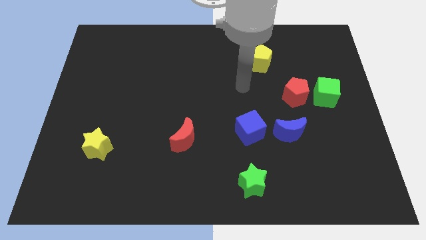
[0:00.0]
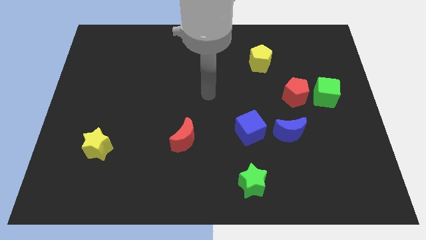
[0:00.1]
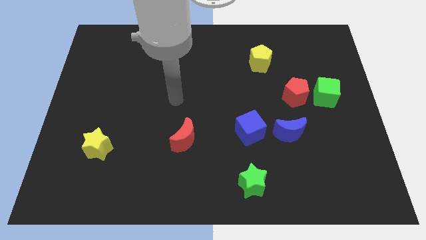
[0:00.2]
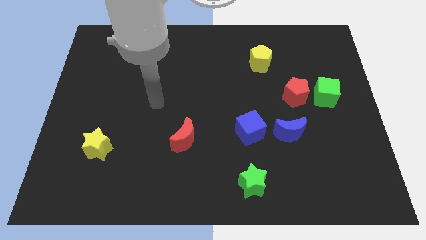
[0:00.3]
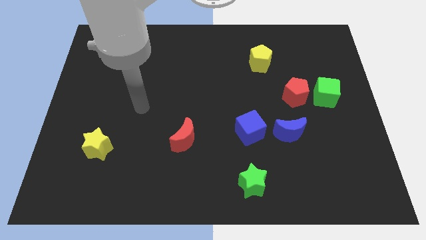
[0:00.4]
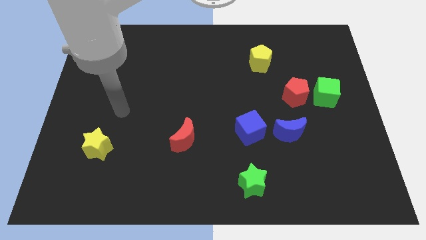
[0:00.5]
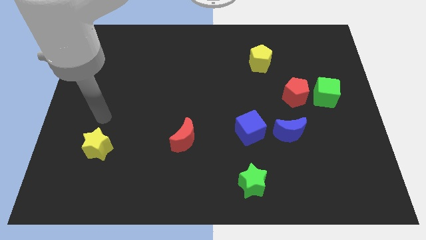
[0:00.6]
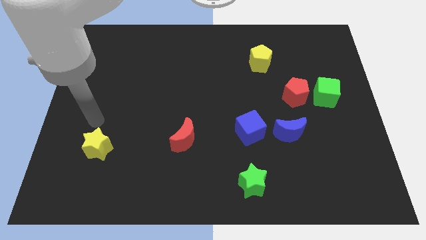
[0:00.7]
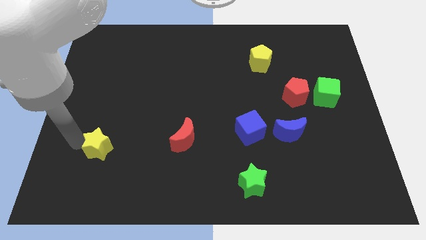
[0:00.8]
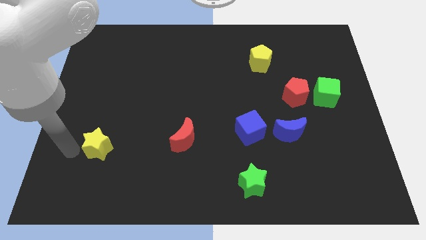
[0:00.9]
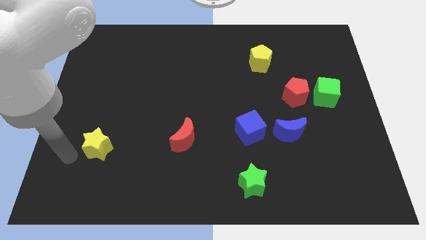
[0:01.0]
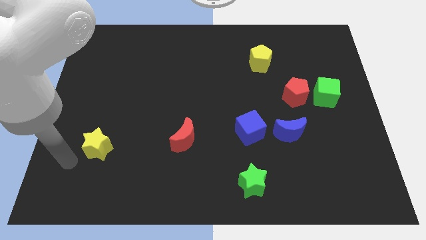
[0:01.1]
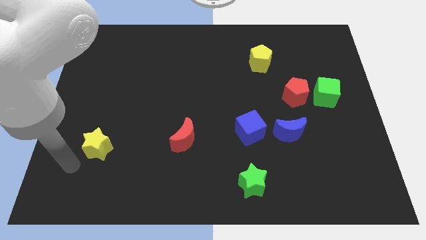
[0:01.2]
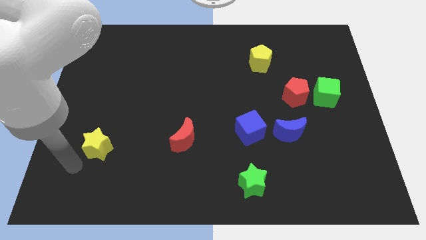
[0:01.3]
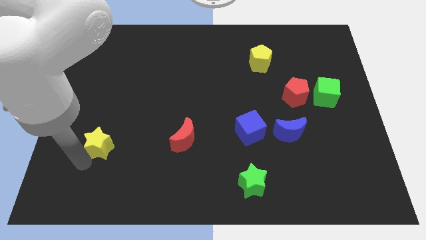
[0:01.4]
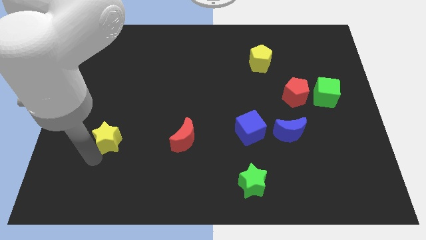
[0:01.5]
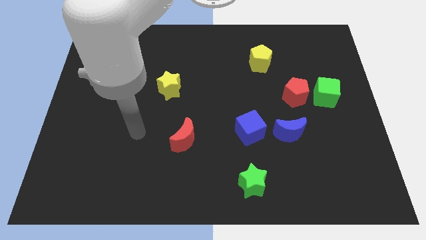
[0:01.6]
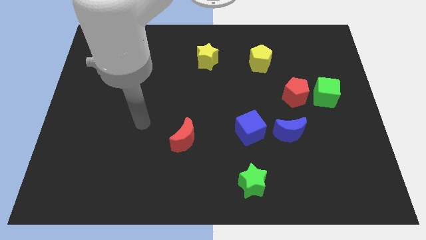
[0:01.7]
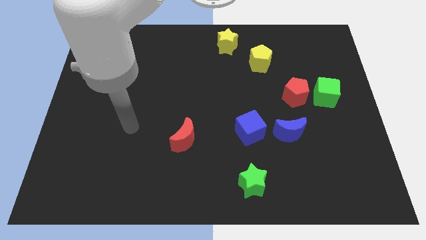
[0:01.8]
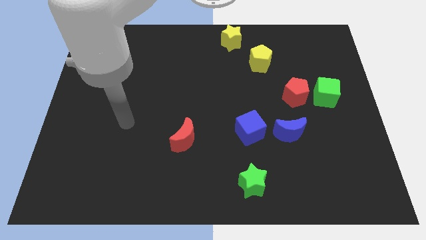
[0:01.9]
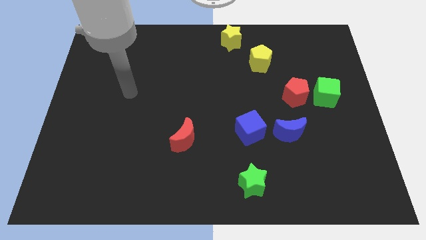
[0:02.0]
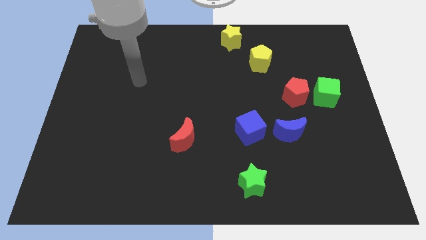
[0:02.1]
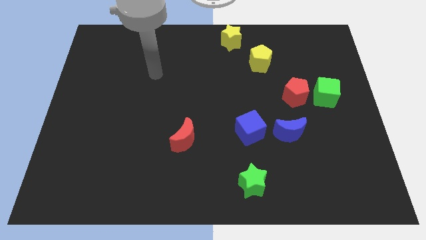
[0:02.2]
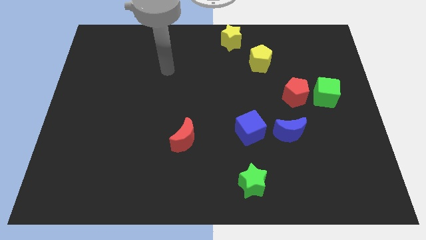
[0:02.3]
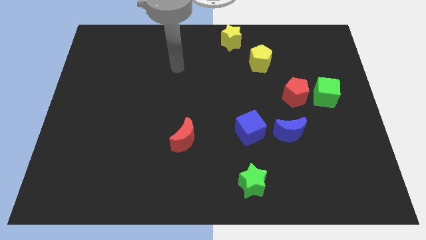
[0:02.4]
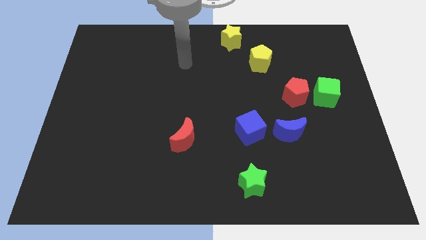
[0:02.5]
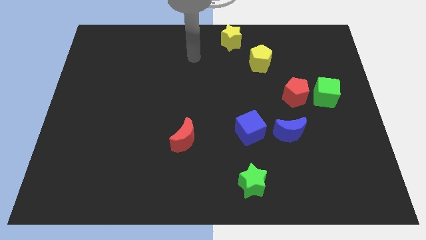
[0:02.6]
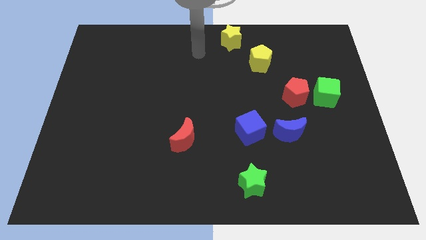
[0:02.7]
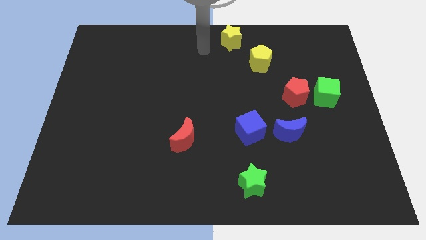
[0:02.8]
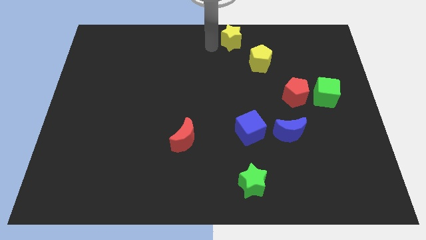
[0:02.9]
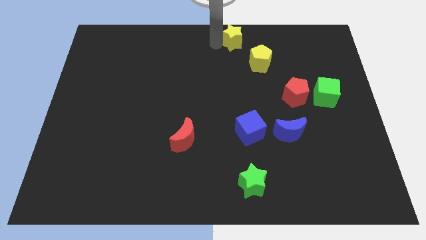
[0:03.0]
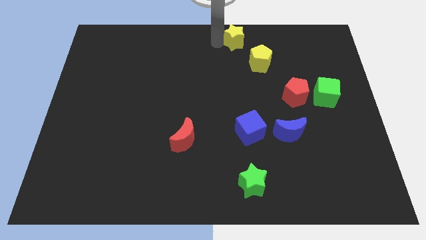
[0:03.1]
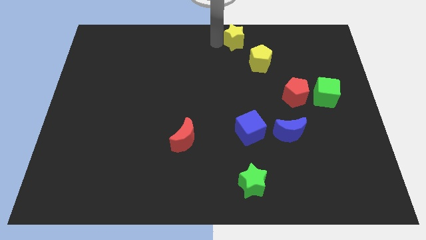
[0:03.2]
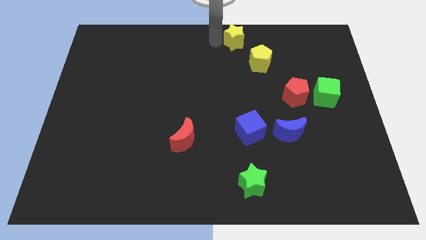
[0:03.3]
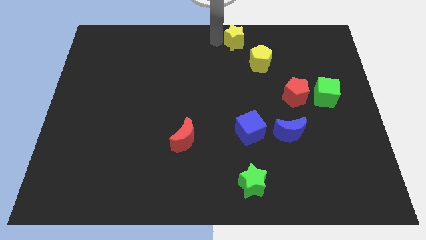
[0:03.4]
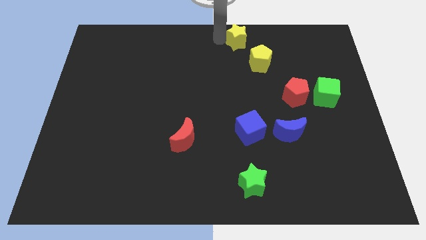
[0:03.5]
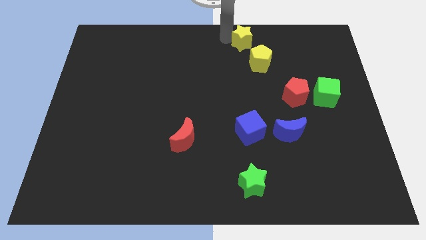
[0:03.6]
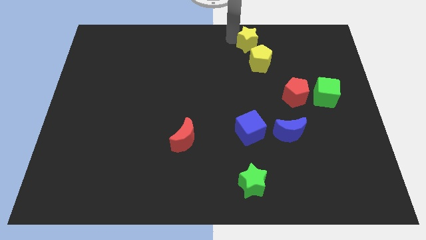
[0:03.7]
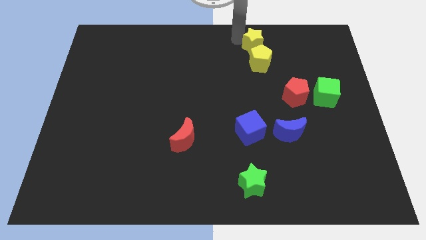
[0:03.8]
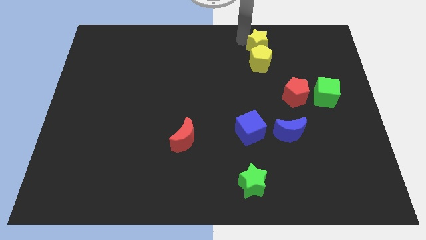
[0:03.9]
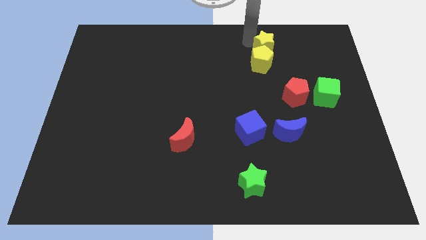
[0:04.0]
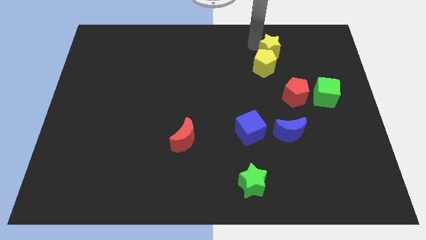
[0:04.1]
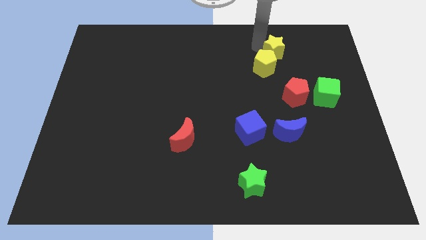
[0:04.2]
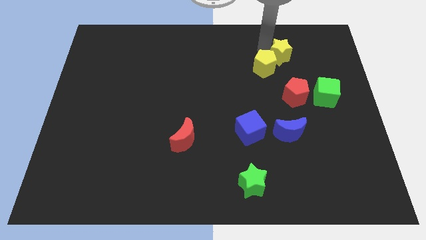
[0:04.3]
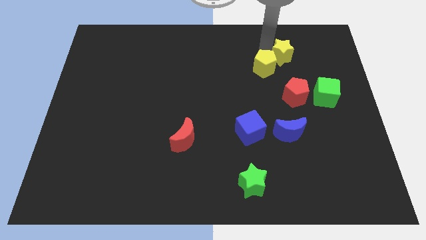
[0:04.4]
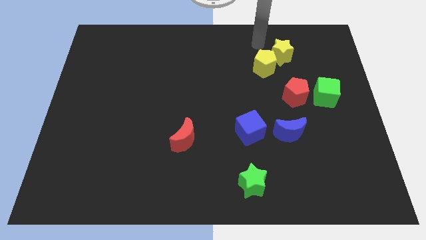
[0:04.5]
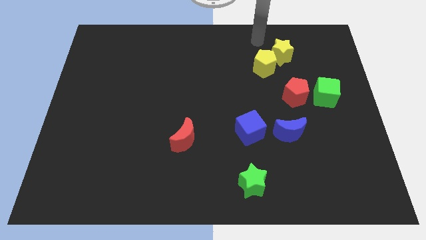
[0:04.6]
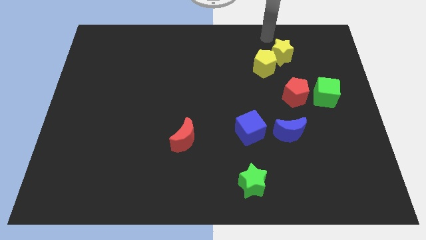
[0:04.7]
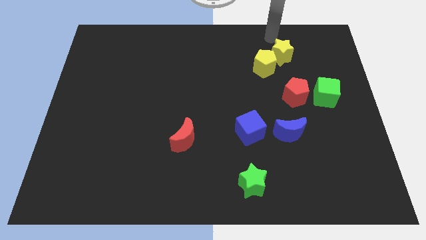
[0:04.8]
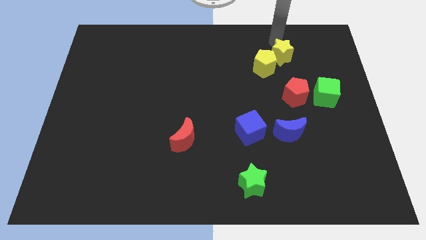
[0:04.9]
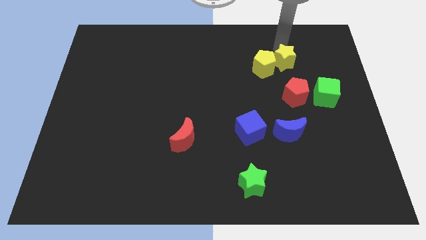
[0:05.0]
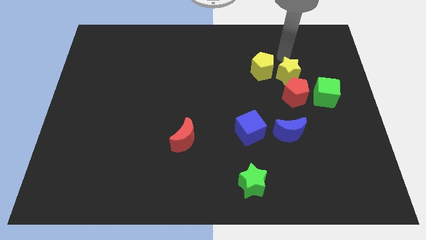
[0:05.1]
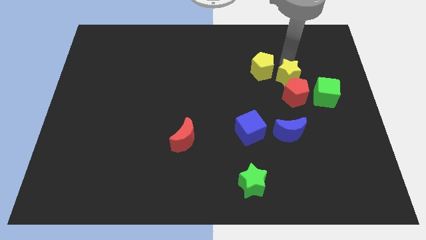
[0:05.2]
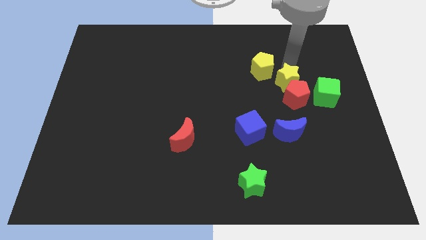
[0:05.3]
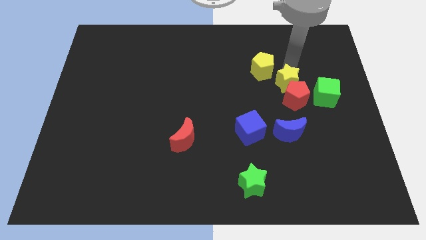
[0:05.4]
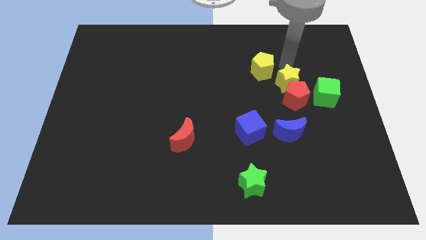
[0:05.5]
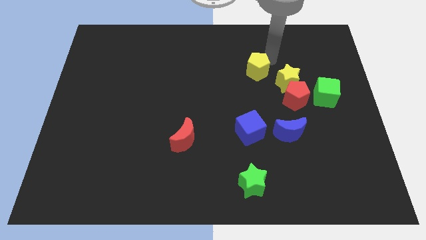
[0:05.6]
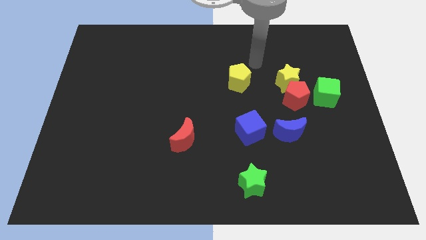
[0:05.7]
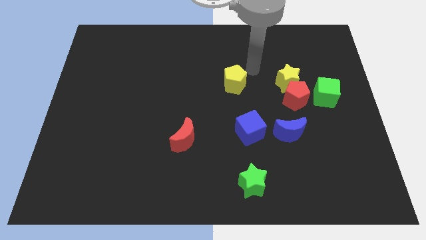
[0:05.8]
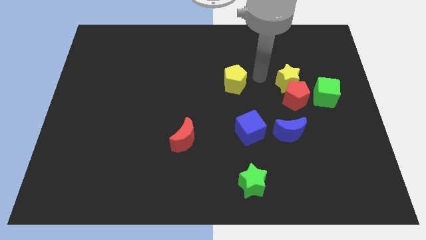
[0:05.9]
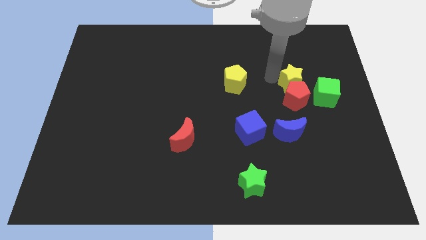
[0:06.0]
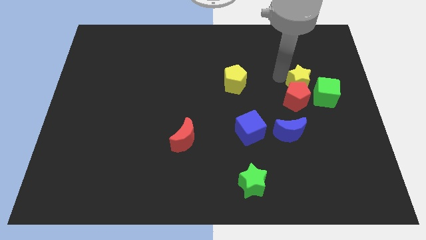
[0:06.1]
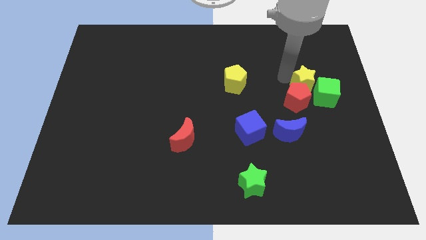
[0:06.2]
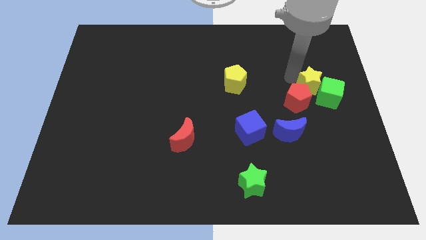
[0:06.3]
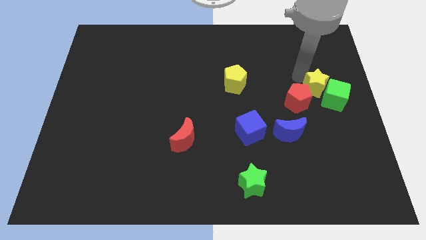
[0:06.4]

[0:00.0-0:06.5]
put the yellow star towards the green cube

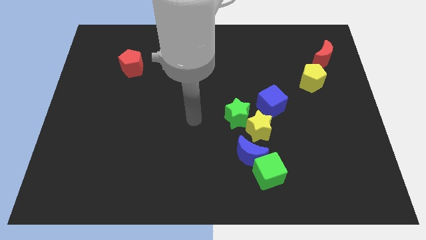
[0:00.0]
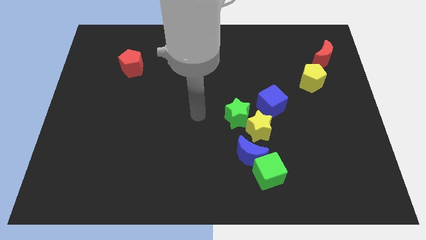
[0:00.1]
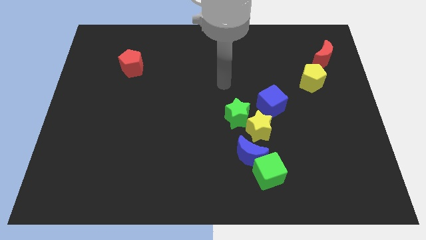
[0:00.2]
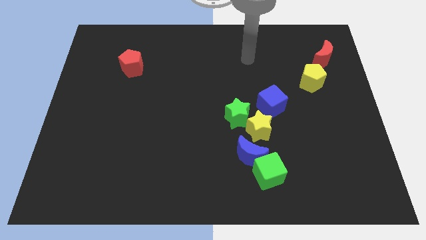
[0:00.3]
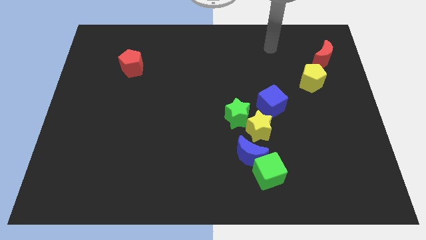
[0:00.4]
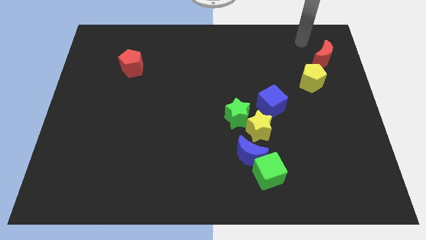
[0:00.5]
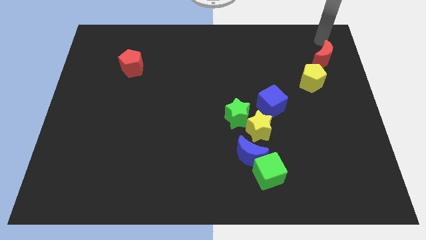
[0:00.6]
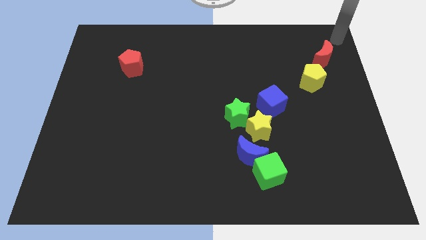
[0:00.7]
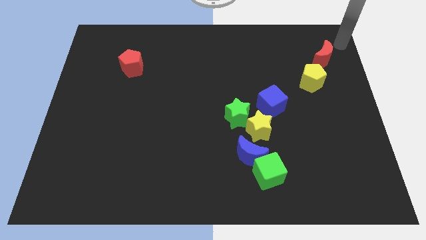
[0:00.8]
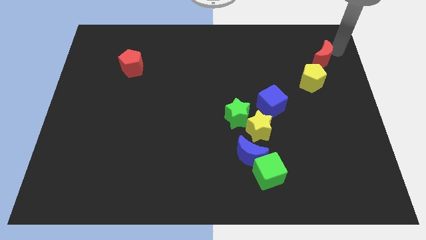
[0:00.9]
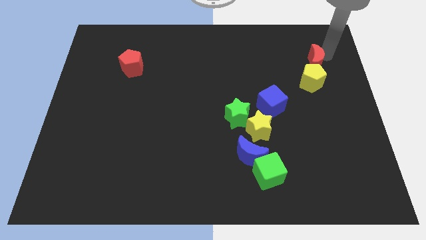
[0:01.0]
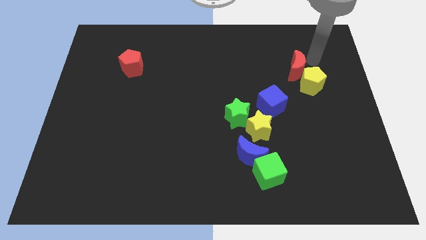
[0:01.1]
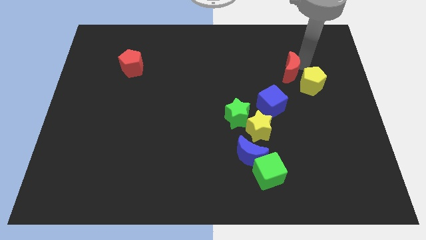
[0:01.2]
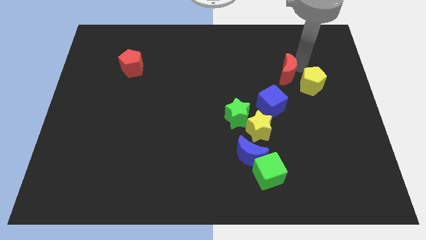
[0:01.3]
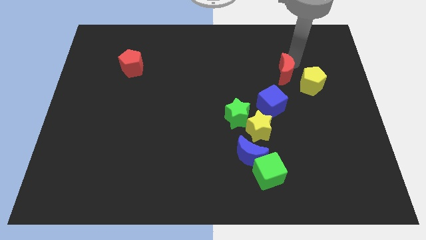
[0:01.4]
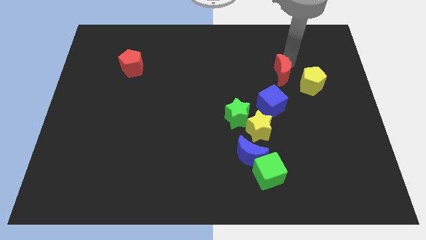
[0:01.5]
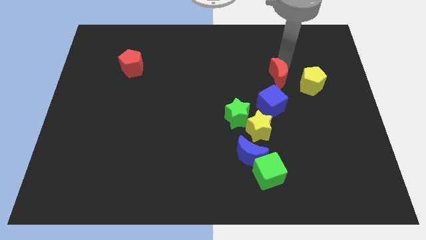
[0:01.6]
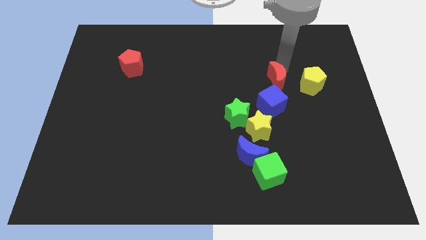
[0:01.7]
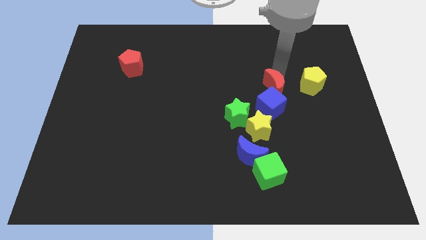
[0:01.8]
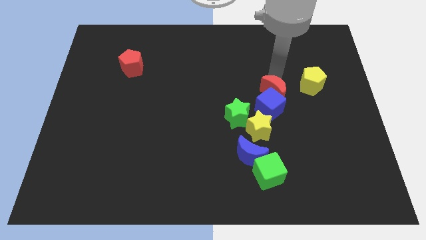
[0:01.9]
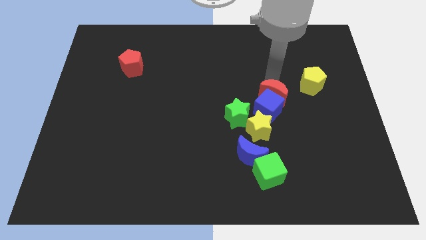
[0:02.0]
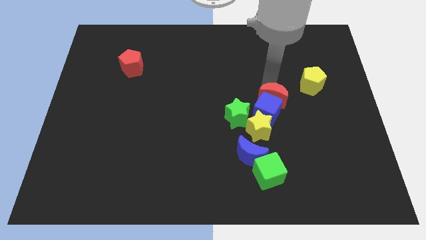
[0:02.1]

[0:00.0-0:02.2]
push the red moon next to the blue cube
